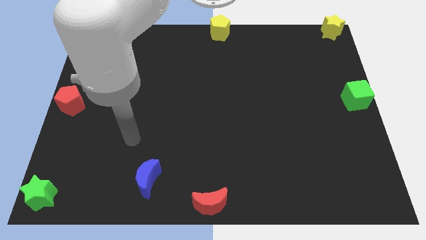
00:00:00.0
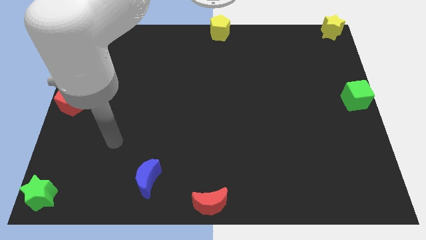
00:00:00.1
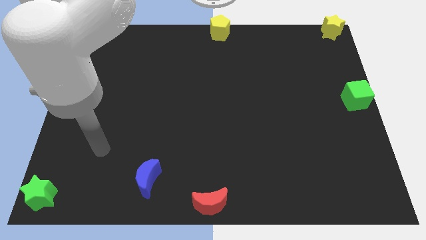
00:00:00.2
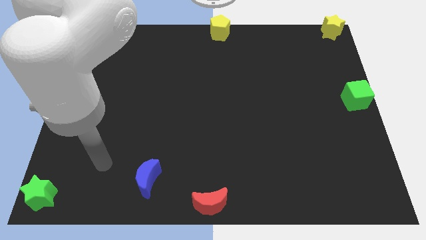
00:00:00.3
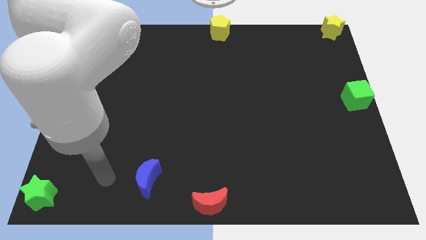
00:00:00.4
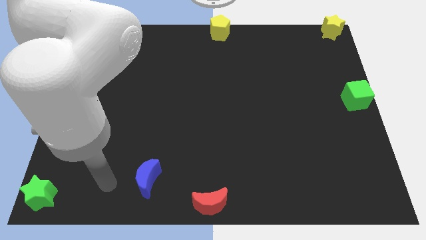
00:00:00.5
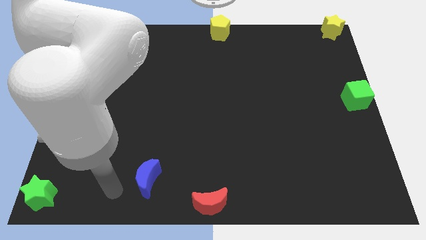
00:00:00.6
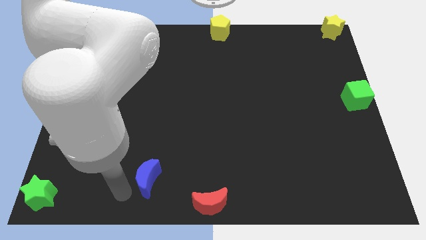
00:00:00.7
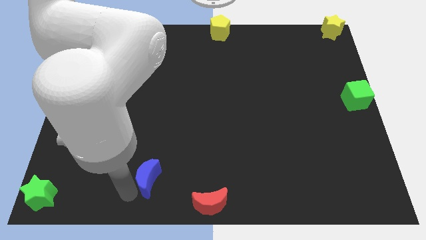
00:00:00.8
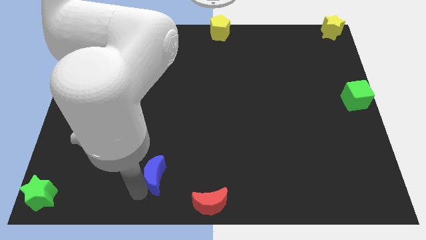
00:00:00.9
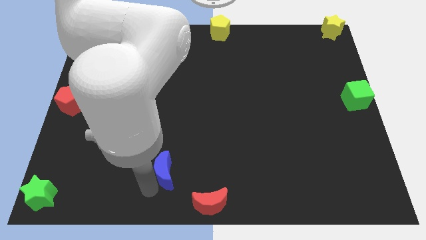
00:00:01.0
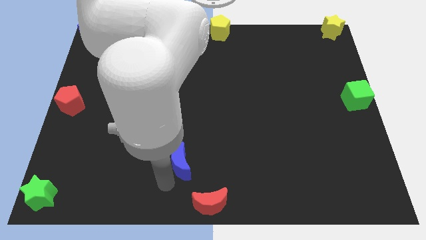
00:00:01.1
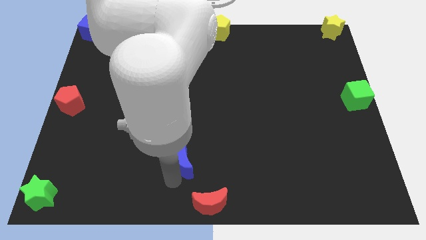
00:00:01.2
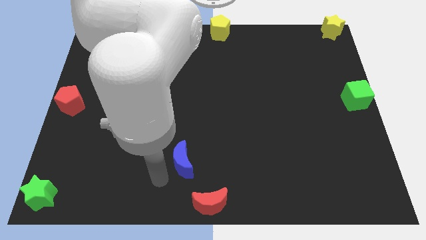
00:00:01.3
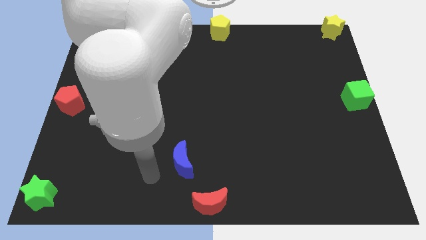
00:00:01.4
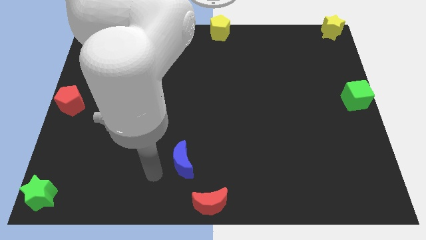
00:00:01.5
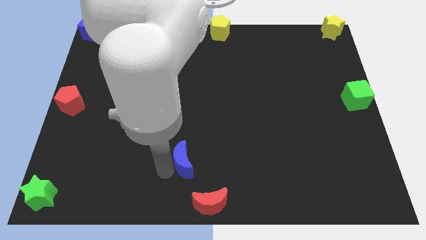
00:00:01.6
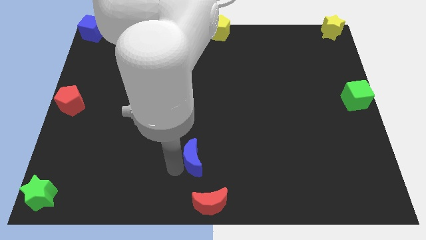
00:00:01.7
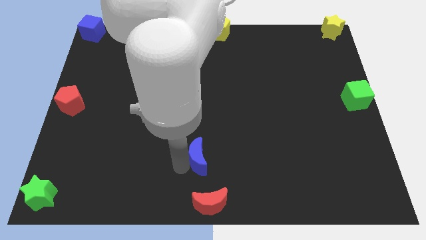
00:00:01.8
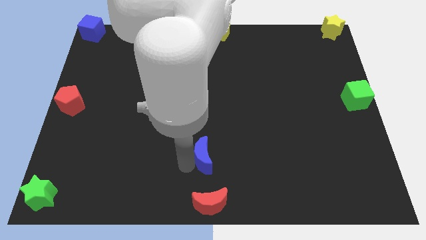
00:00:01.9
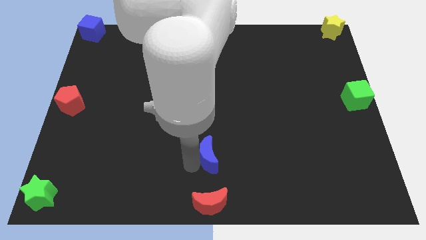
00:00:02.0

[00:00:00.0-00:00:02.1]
push the blue crescent to the top side of the red moon

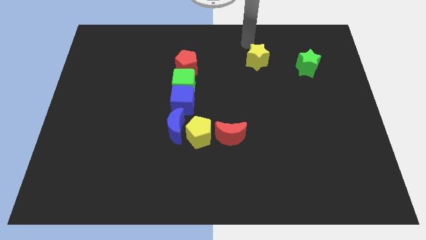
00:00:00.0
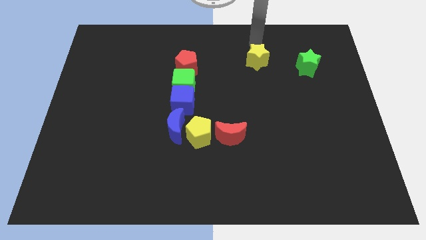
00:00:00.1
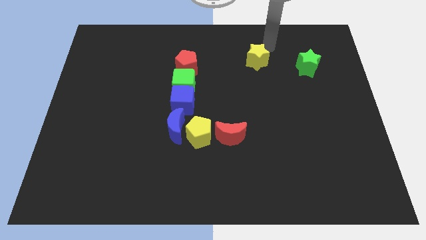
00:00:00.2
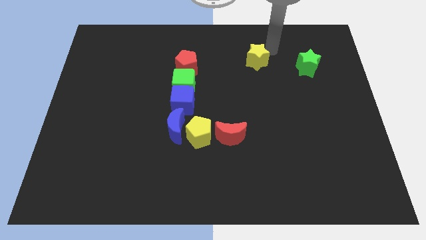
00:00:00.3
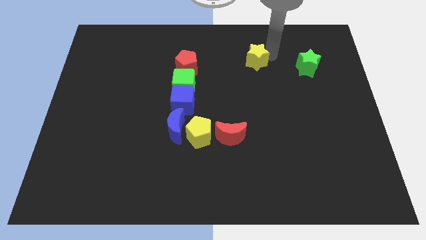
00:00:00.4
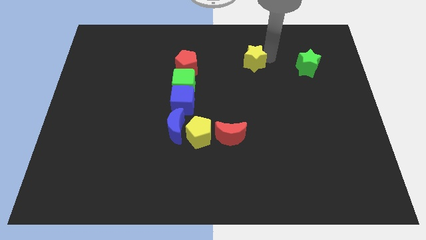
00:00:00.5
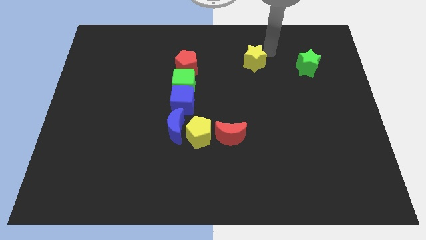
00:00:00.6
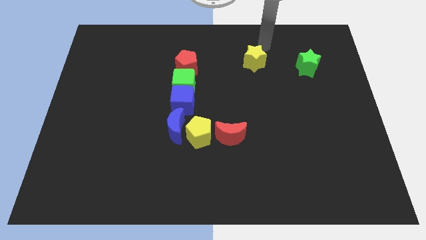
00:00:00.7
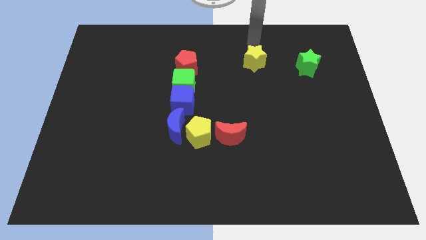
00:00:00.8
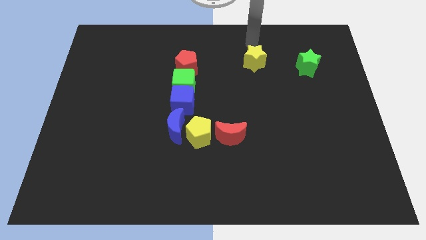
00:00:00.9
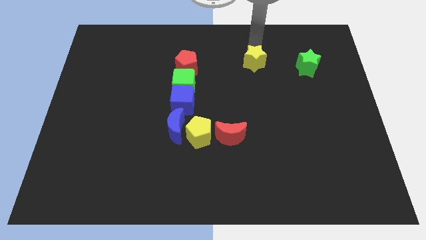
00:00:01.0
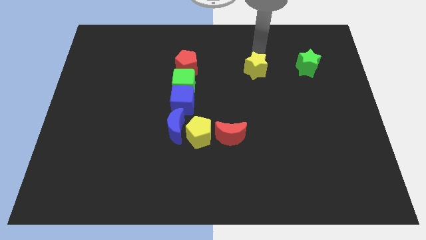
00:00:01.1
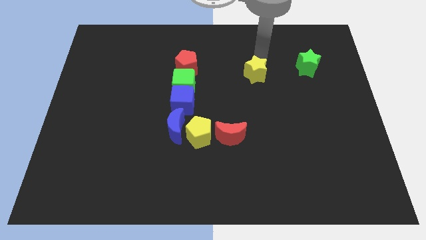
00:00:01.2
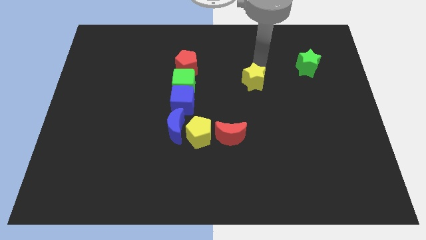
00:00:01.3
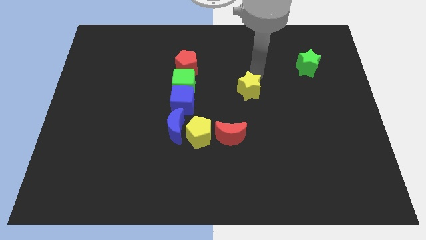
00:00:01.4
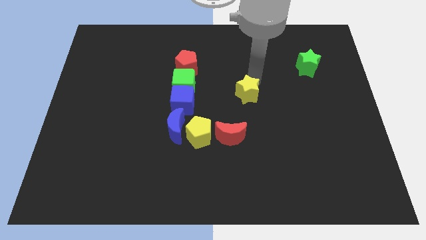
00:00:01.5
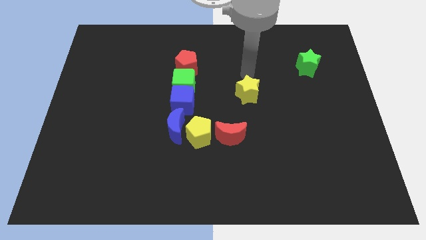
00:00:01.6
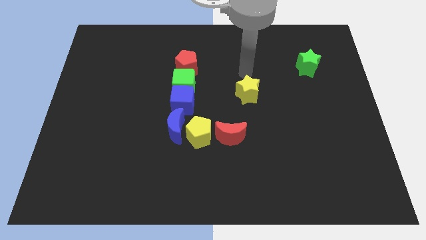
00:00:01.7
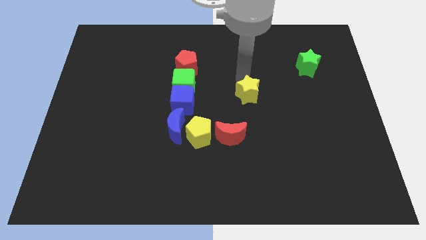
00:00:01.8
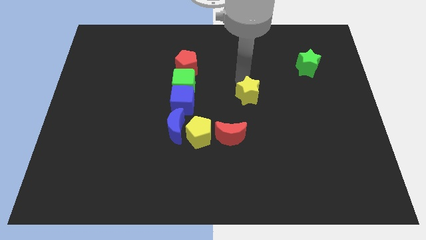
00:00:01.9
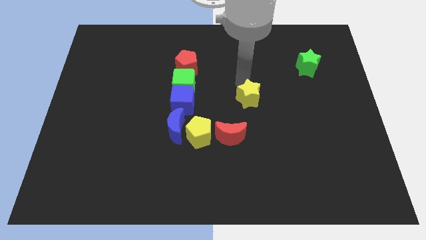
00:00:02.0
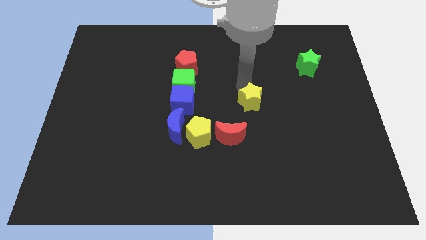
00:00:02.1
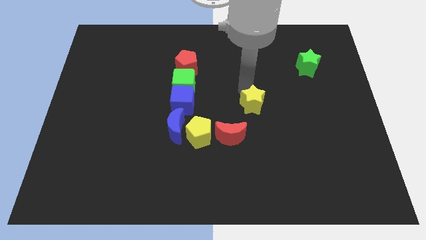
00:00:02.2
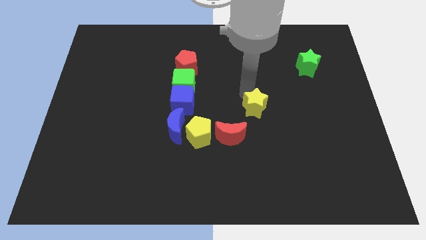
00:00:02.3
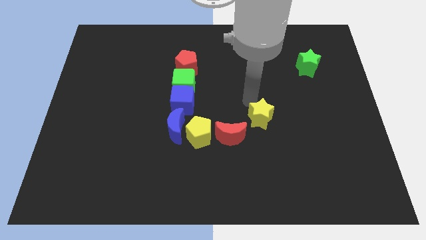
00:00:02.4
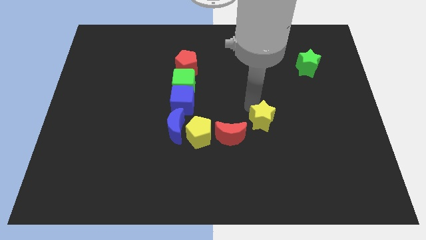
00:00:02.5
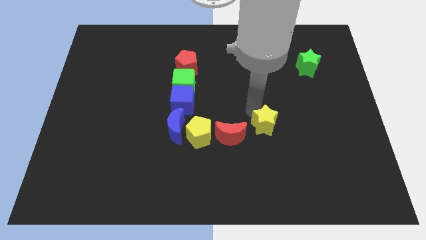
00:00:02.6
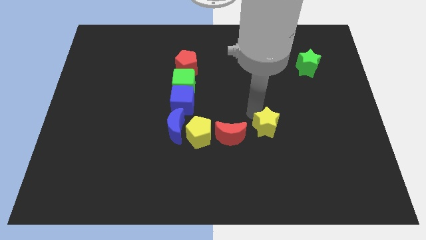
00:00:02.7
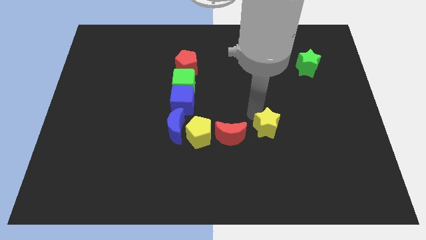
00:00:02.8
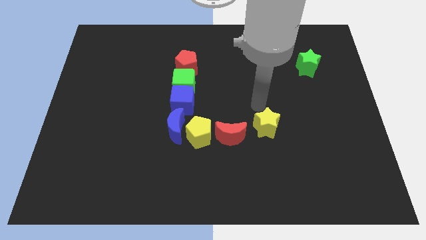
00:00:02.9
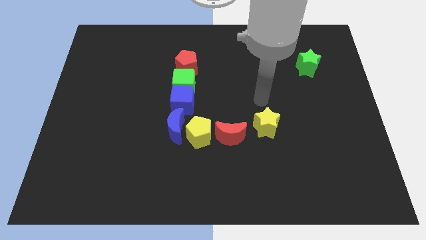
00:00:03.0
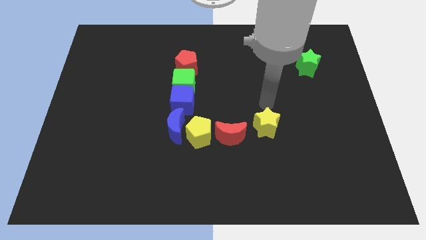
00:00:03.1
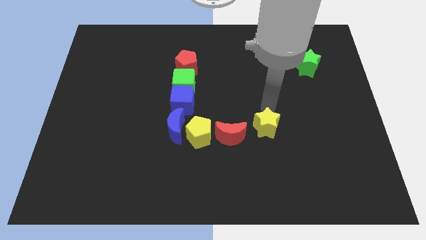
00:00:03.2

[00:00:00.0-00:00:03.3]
move yellow pentagon to the right of red moon

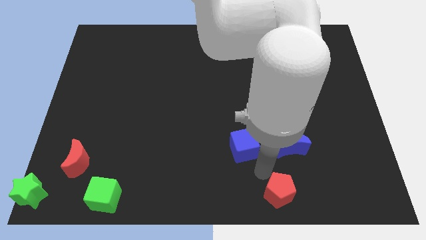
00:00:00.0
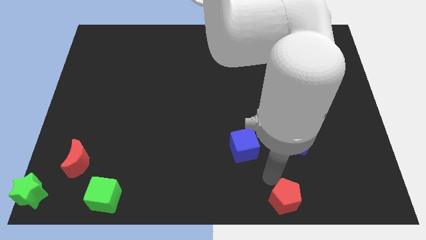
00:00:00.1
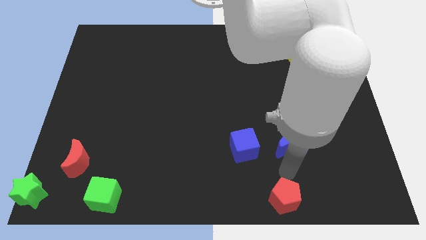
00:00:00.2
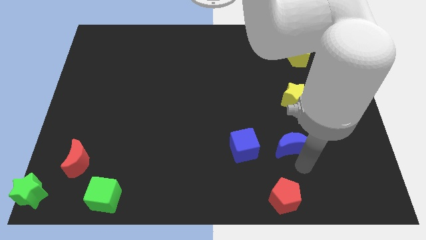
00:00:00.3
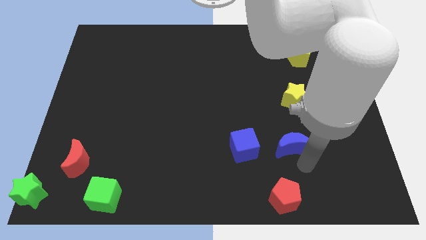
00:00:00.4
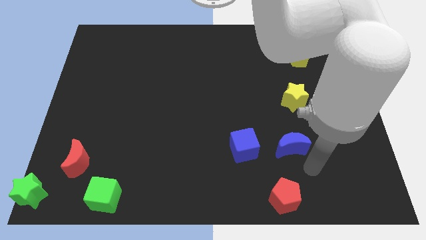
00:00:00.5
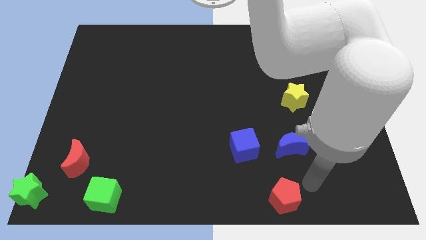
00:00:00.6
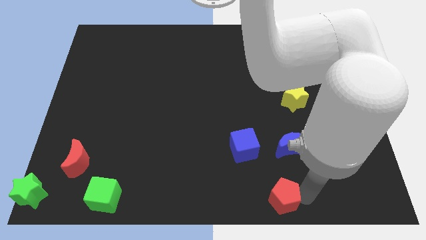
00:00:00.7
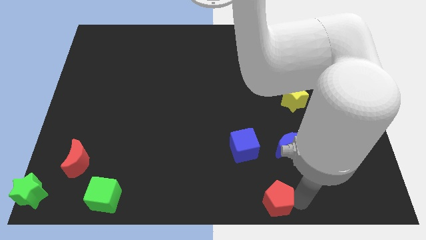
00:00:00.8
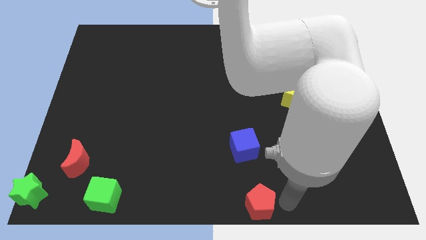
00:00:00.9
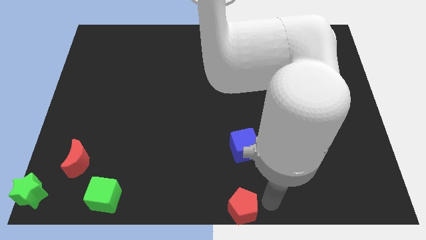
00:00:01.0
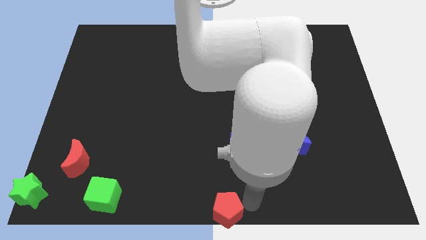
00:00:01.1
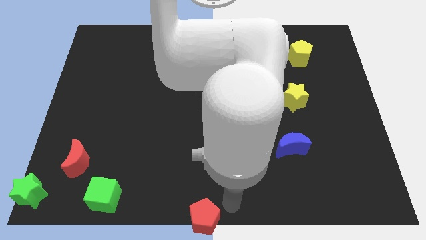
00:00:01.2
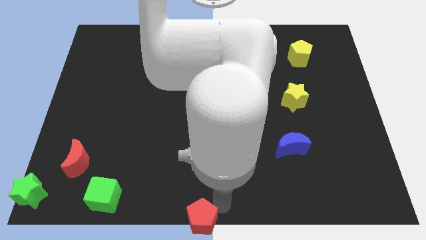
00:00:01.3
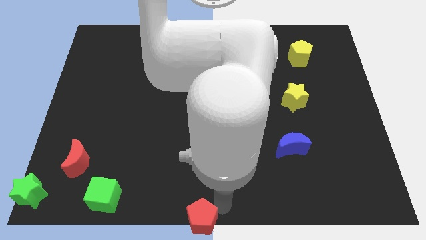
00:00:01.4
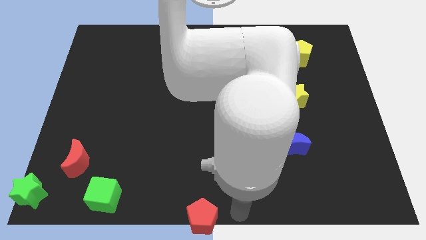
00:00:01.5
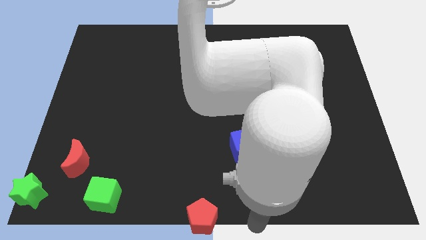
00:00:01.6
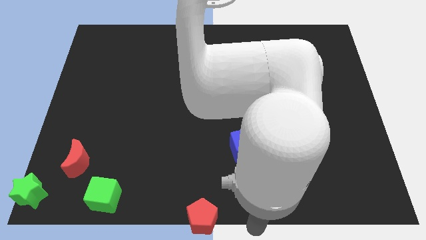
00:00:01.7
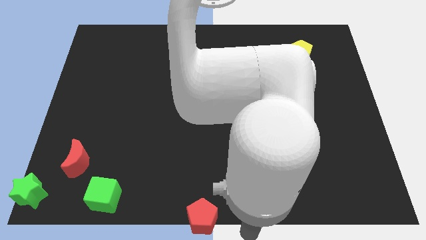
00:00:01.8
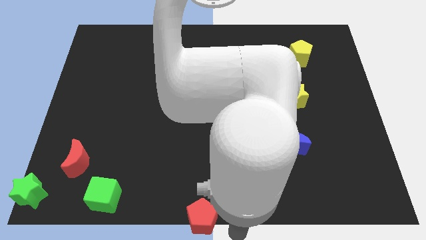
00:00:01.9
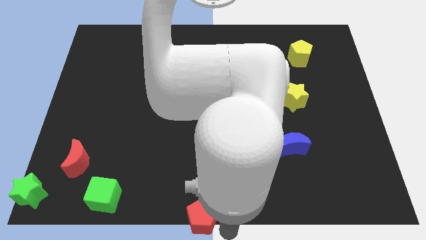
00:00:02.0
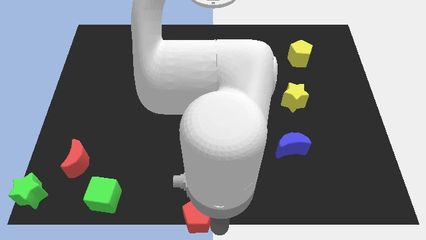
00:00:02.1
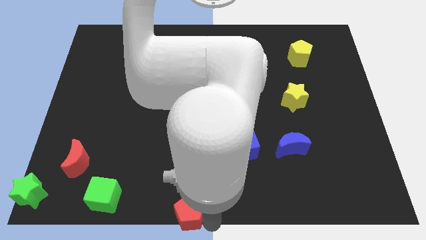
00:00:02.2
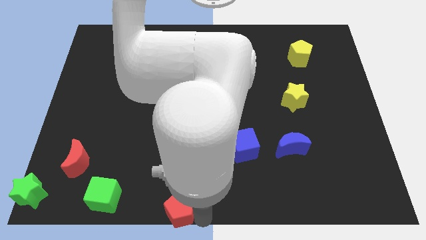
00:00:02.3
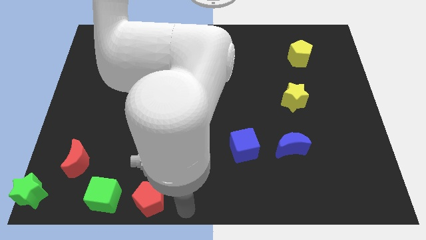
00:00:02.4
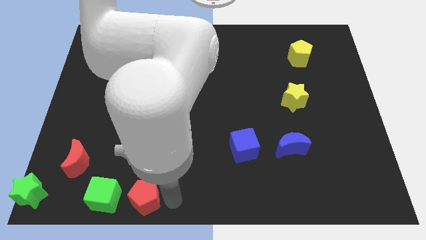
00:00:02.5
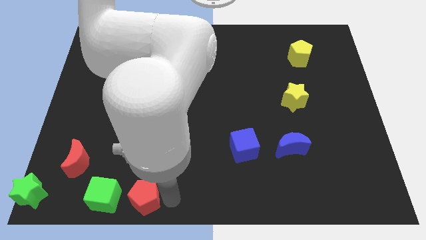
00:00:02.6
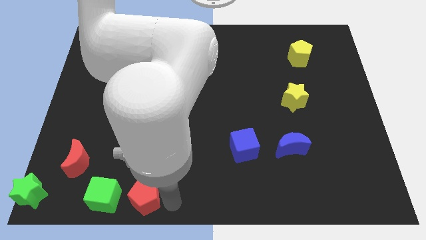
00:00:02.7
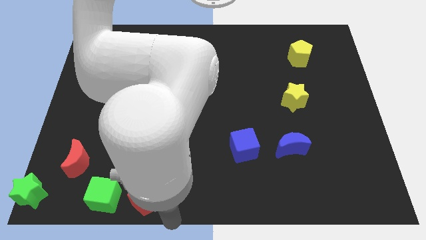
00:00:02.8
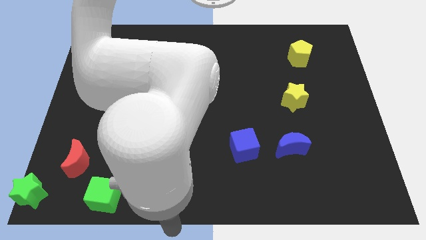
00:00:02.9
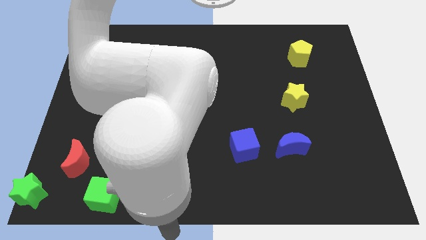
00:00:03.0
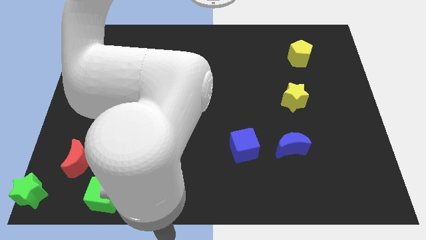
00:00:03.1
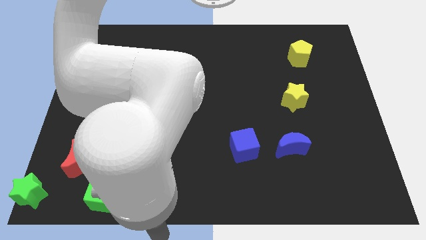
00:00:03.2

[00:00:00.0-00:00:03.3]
push the red pentagon towards the green cube

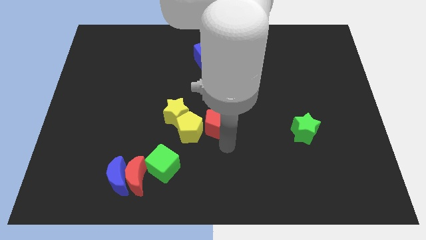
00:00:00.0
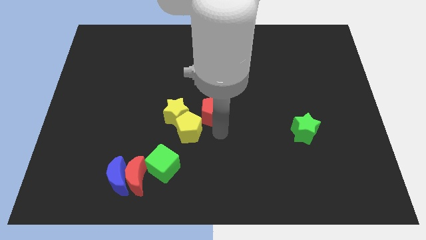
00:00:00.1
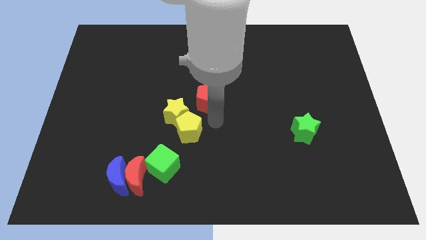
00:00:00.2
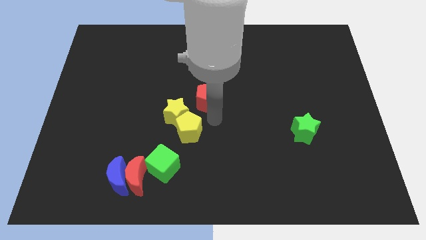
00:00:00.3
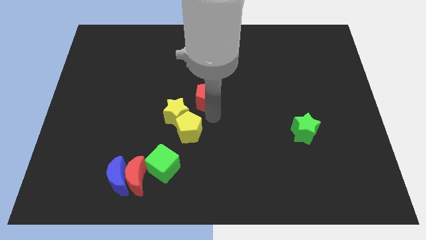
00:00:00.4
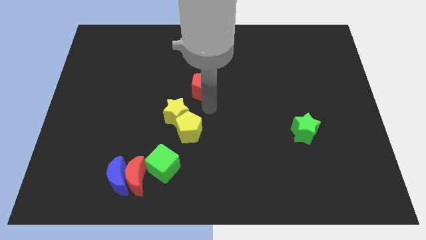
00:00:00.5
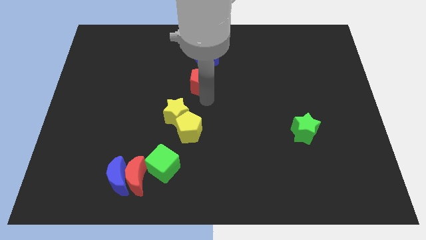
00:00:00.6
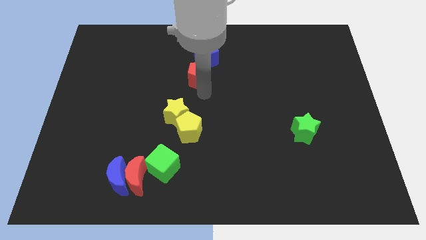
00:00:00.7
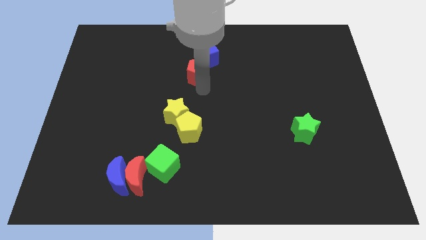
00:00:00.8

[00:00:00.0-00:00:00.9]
move the red pentagon slightly close to the blue cube
